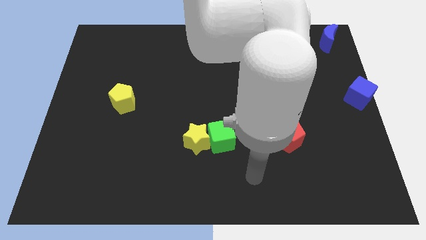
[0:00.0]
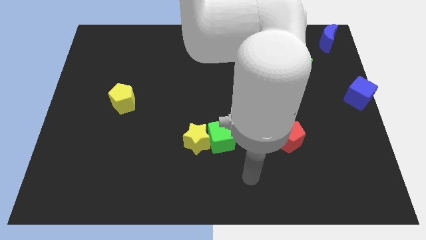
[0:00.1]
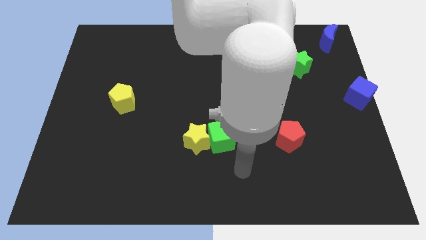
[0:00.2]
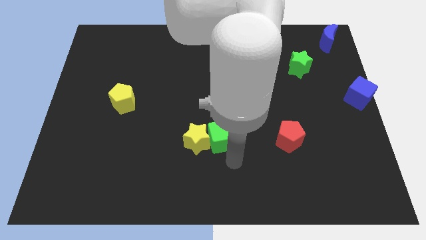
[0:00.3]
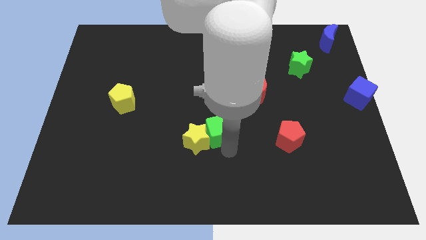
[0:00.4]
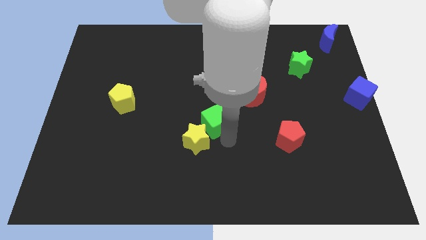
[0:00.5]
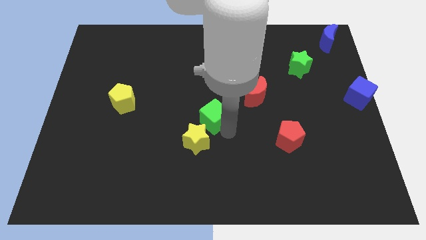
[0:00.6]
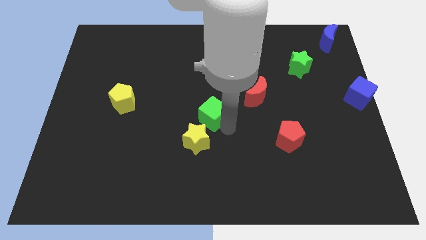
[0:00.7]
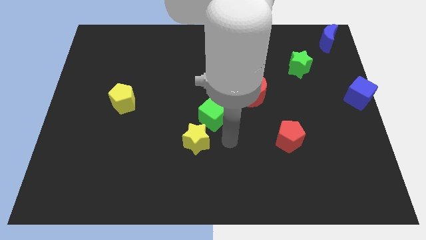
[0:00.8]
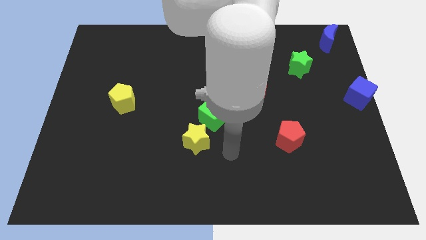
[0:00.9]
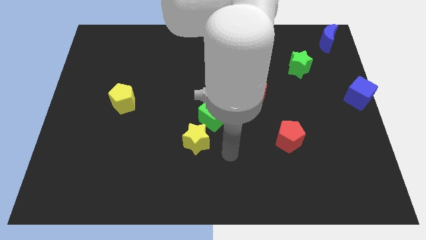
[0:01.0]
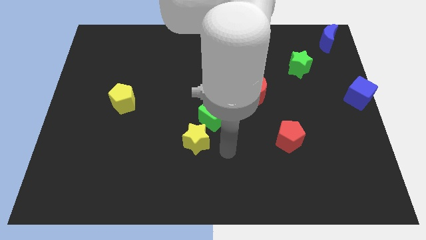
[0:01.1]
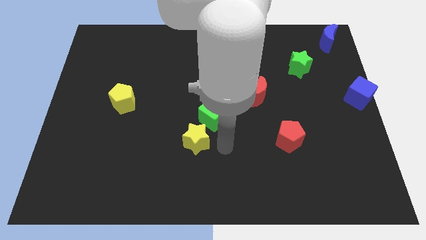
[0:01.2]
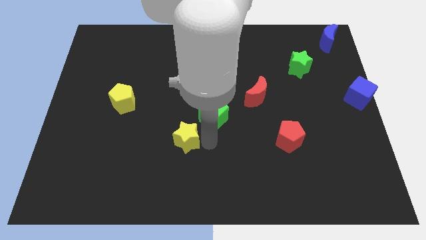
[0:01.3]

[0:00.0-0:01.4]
put green cube at the top right side of the yellow star

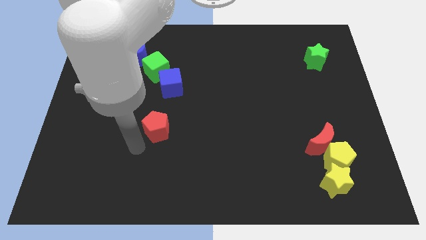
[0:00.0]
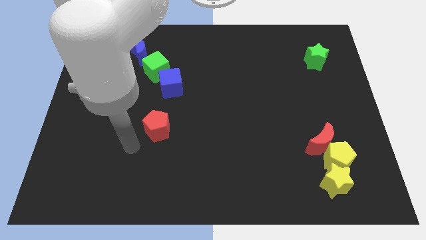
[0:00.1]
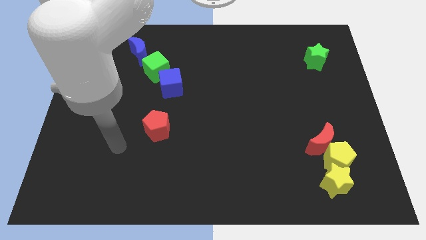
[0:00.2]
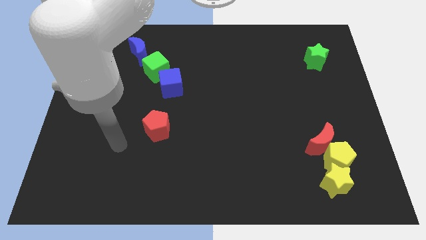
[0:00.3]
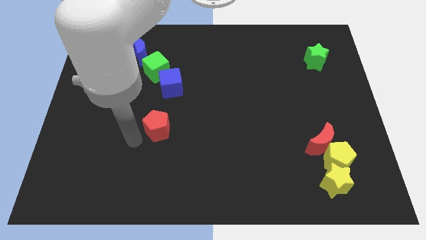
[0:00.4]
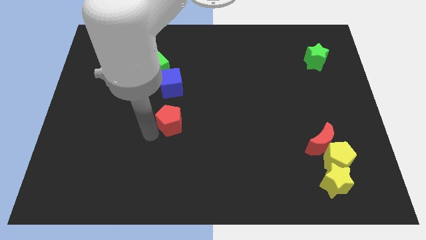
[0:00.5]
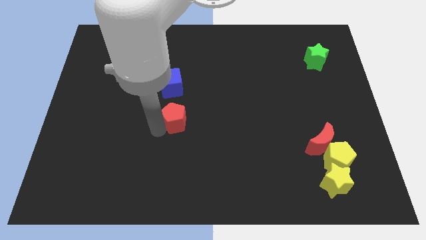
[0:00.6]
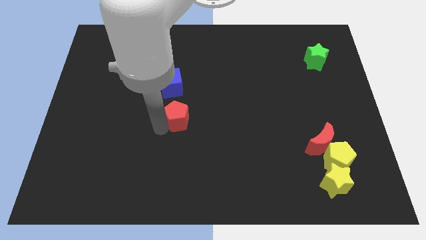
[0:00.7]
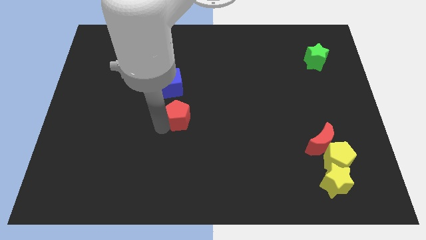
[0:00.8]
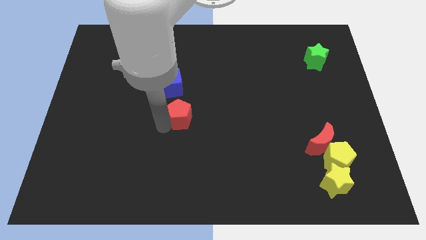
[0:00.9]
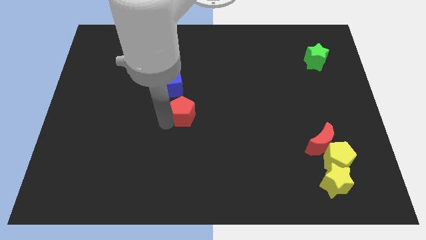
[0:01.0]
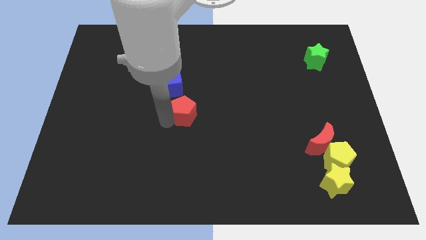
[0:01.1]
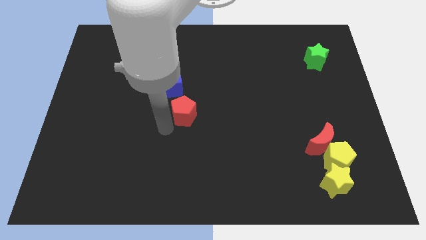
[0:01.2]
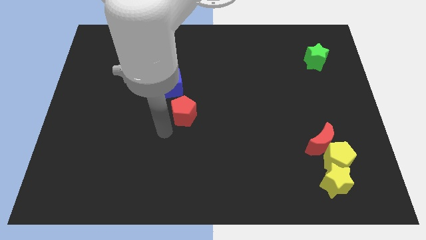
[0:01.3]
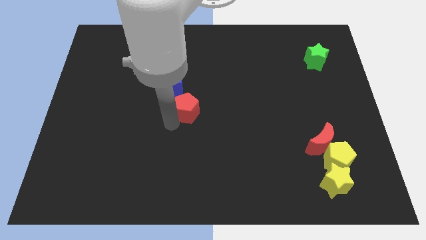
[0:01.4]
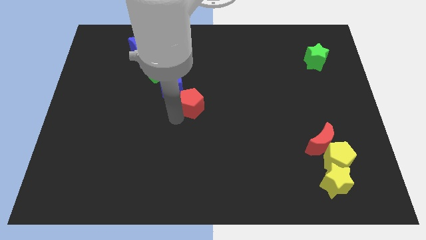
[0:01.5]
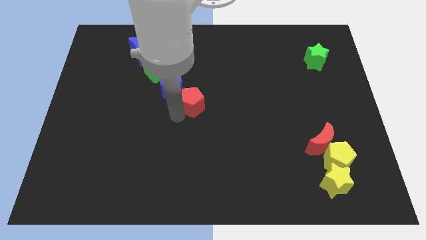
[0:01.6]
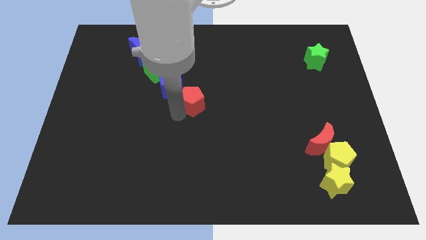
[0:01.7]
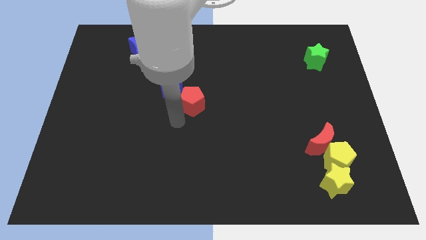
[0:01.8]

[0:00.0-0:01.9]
place the red pentagon at the center of the board

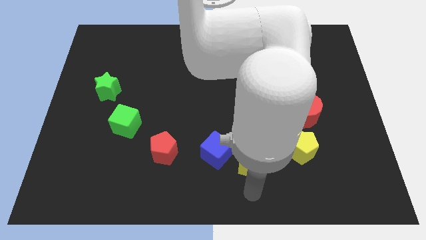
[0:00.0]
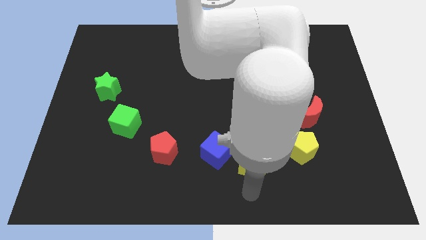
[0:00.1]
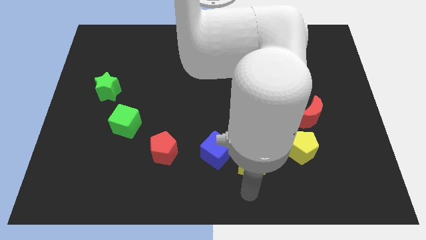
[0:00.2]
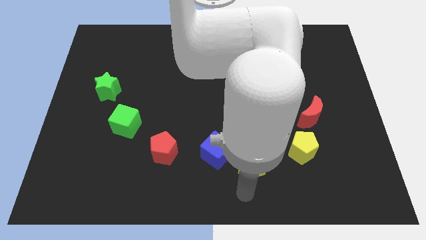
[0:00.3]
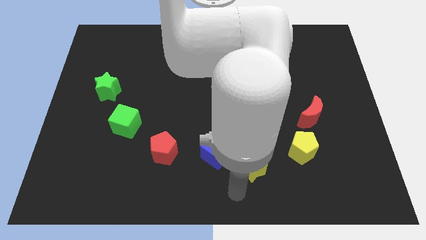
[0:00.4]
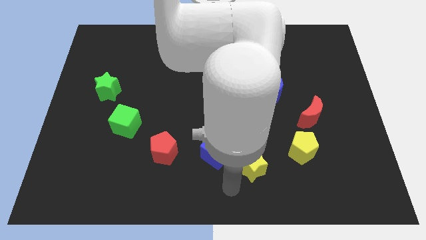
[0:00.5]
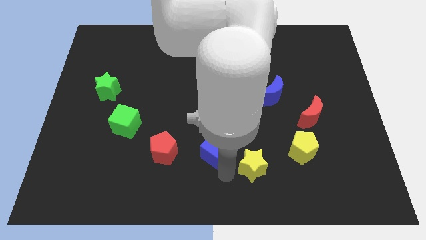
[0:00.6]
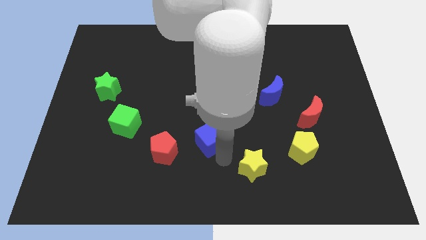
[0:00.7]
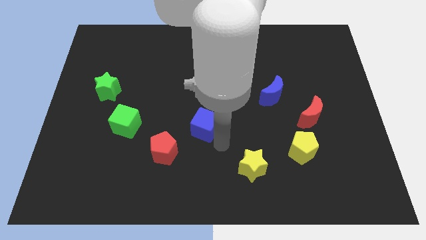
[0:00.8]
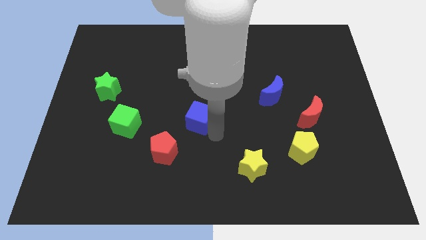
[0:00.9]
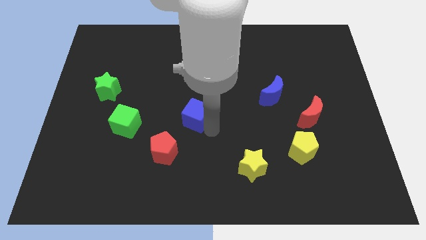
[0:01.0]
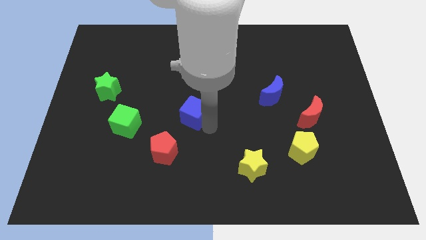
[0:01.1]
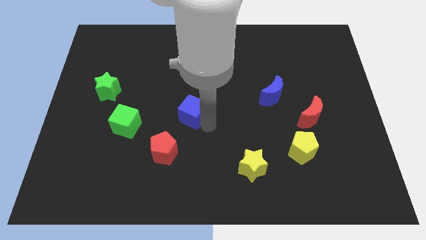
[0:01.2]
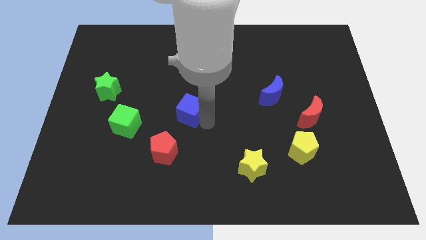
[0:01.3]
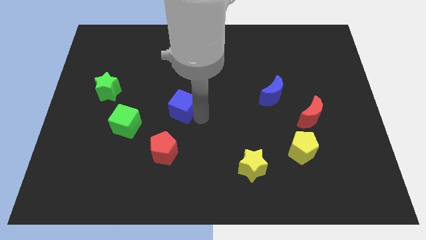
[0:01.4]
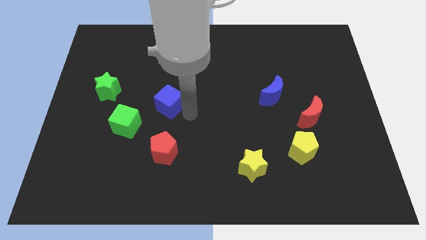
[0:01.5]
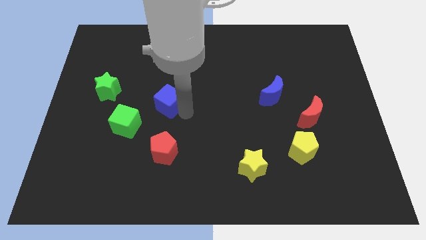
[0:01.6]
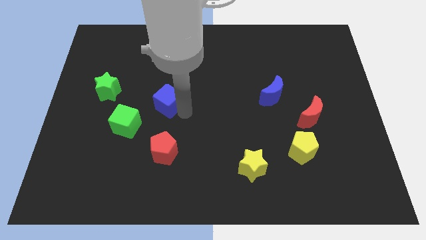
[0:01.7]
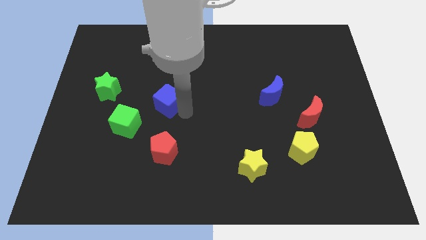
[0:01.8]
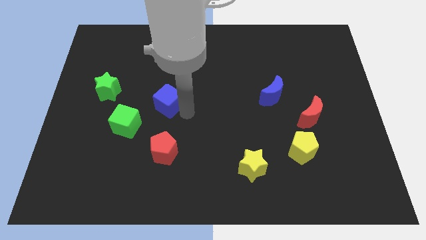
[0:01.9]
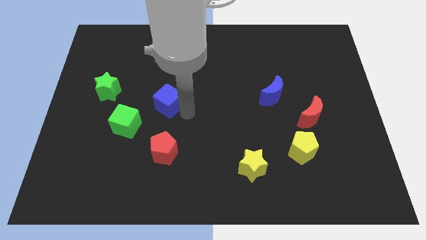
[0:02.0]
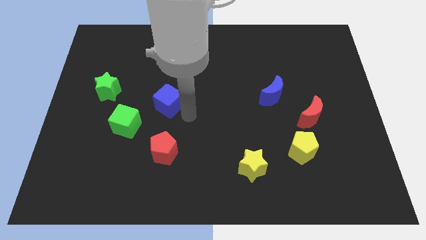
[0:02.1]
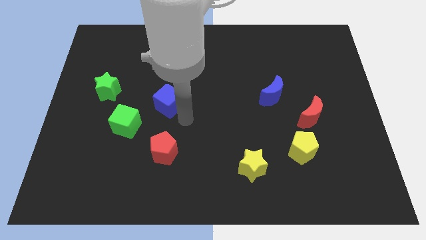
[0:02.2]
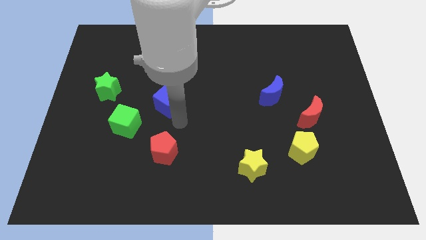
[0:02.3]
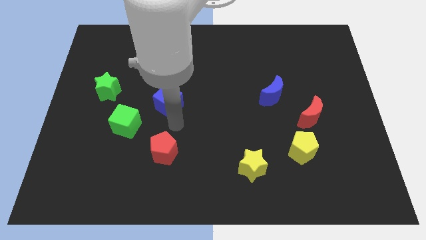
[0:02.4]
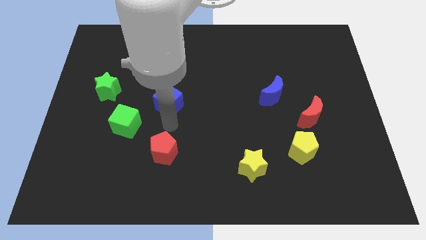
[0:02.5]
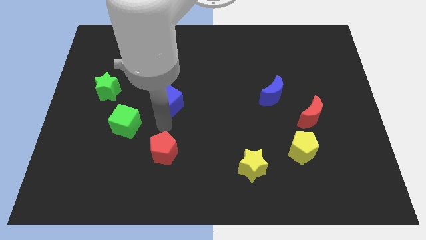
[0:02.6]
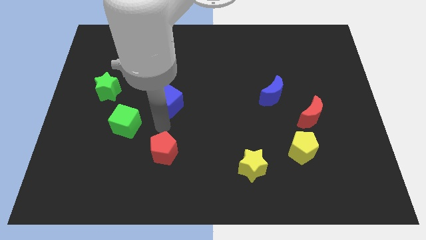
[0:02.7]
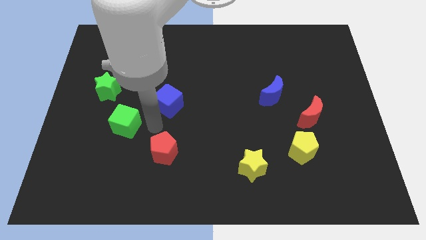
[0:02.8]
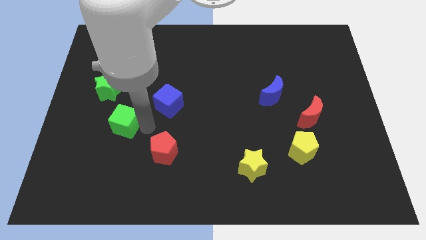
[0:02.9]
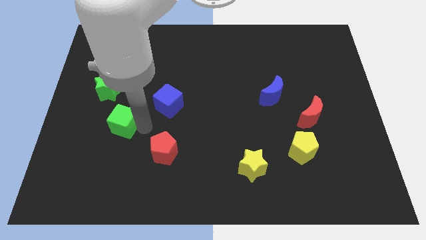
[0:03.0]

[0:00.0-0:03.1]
push the blue cube to the top of the red pentagon

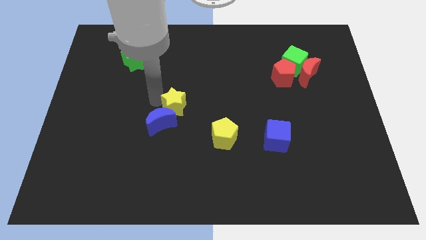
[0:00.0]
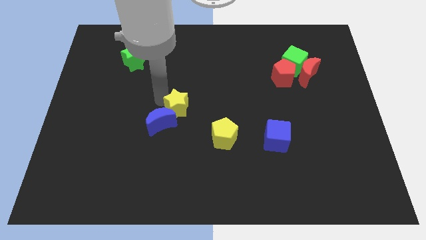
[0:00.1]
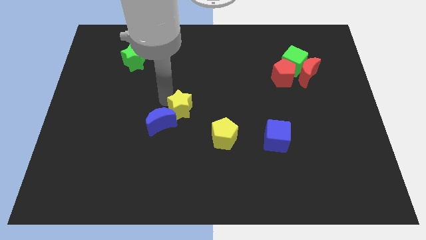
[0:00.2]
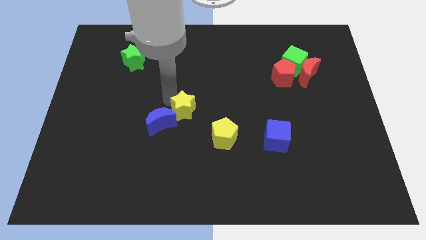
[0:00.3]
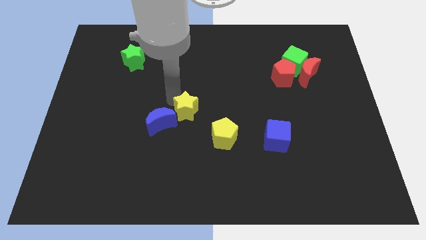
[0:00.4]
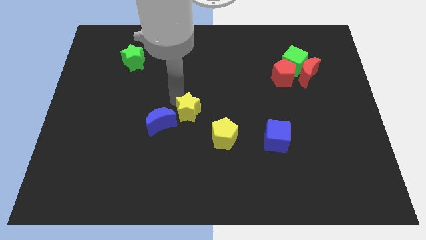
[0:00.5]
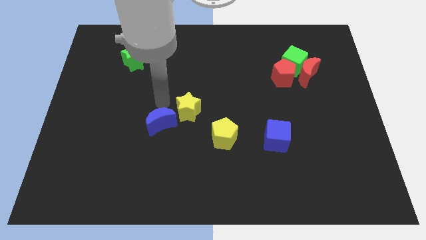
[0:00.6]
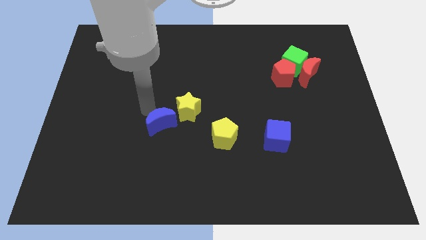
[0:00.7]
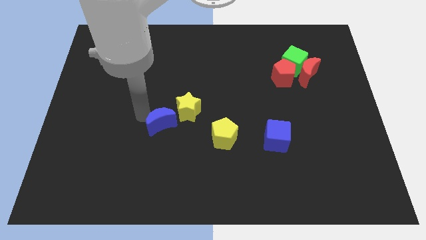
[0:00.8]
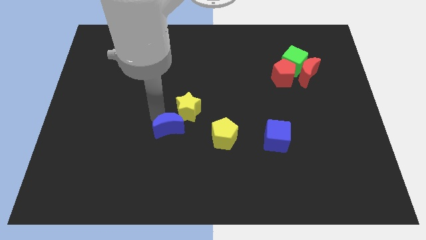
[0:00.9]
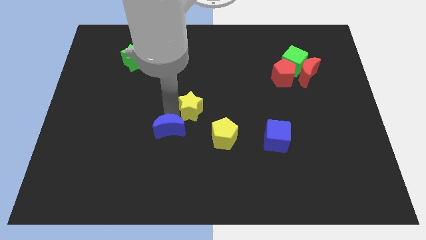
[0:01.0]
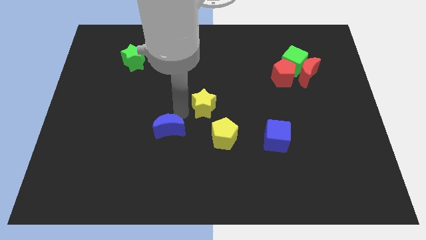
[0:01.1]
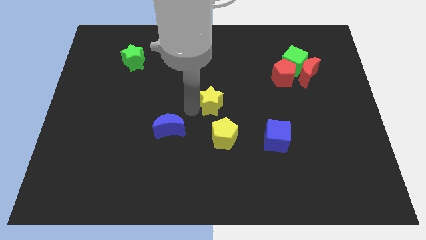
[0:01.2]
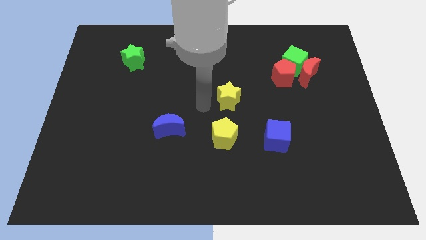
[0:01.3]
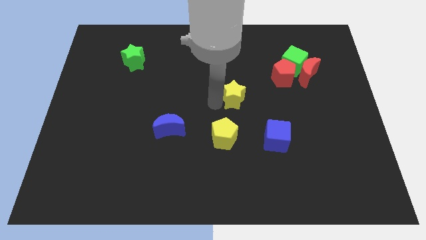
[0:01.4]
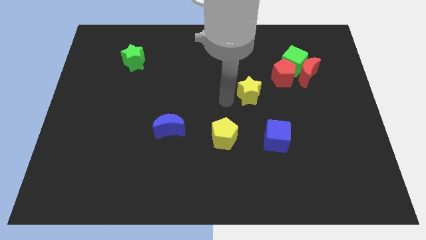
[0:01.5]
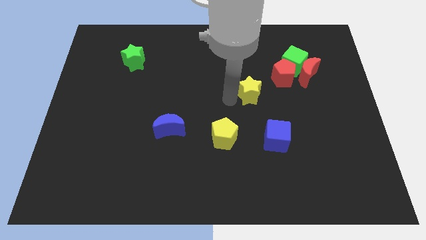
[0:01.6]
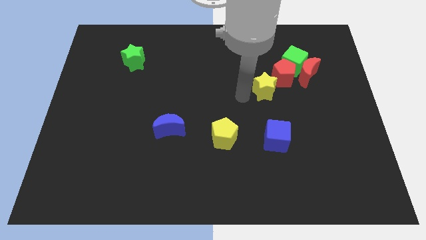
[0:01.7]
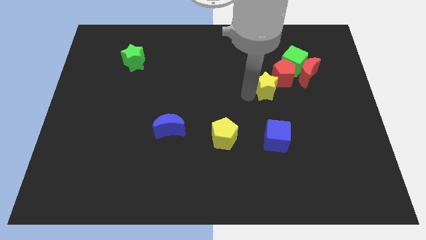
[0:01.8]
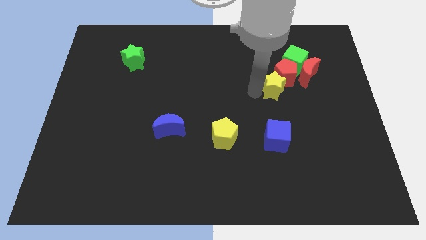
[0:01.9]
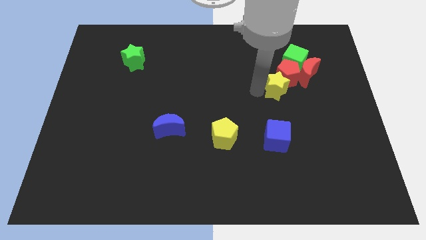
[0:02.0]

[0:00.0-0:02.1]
slide the yellow star into the bottom side of the red pentagon

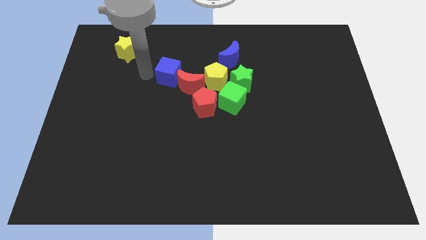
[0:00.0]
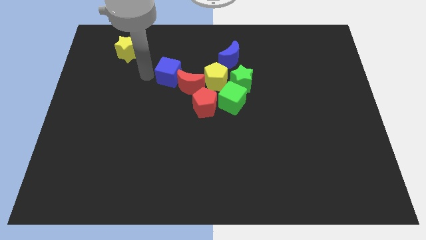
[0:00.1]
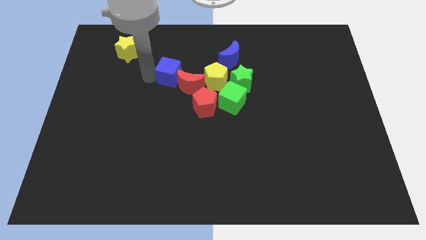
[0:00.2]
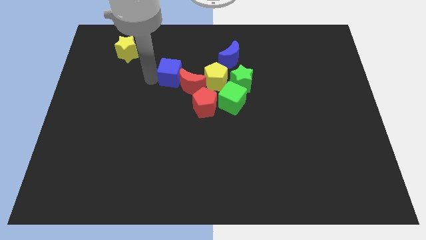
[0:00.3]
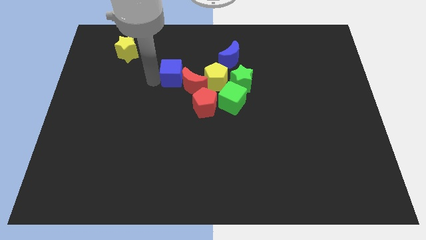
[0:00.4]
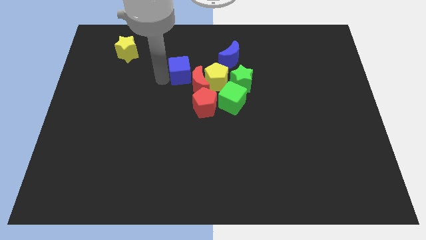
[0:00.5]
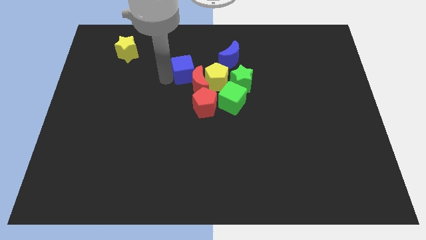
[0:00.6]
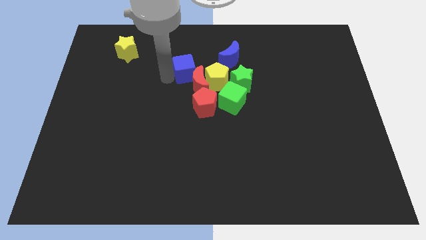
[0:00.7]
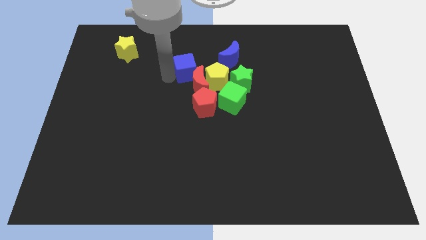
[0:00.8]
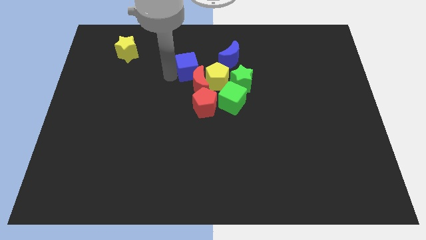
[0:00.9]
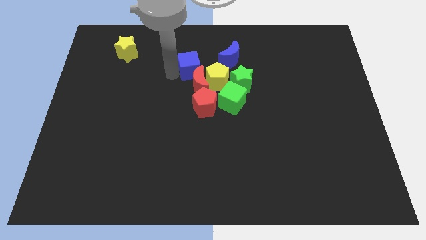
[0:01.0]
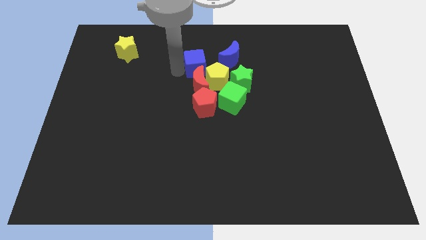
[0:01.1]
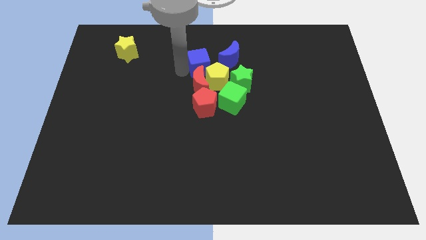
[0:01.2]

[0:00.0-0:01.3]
move the blue cube to the top of the red crescent
